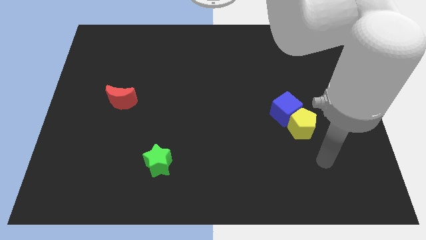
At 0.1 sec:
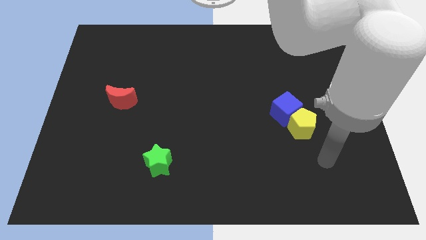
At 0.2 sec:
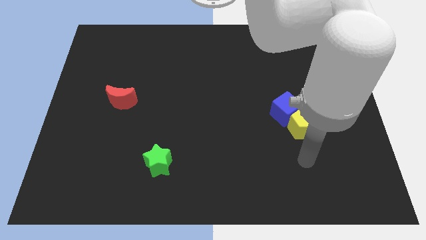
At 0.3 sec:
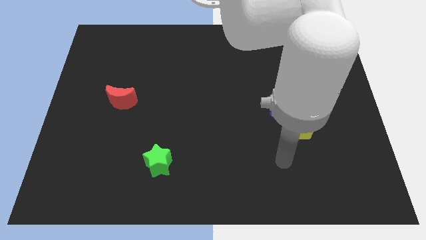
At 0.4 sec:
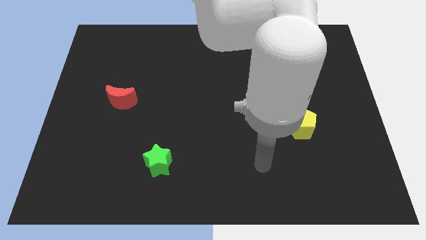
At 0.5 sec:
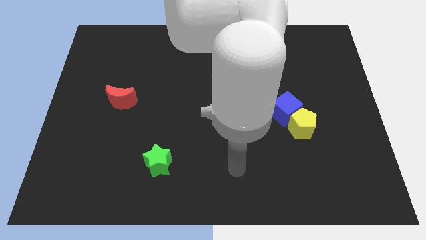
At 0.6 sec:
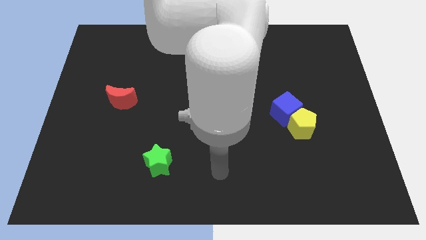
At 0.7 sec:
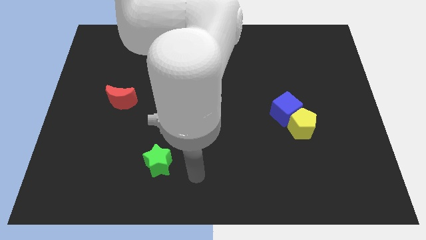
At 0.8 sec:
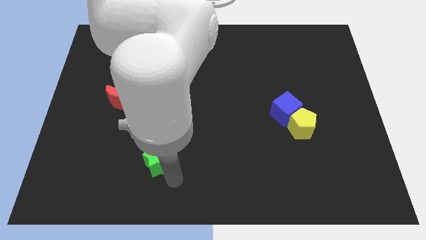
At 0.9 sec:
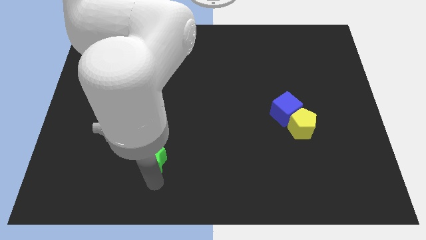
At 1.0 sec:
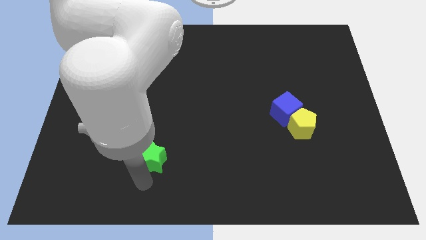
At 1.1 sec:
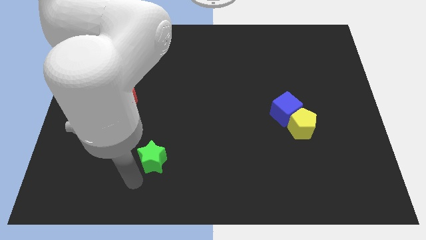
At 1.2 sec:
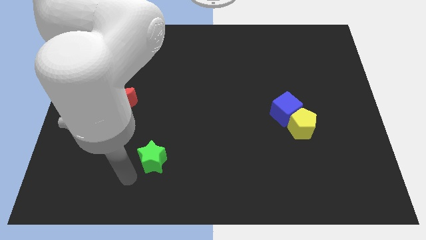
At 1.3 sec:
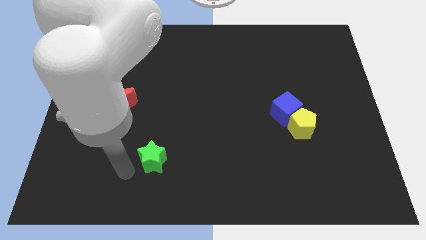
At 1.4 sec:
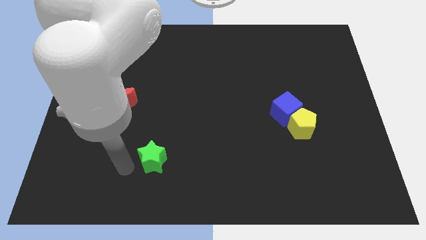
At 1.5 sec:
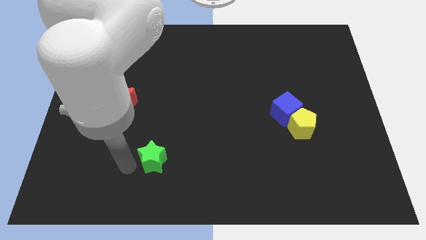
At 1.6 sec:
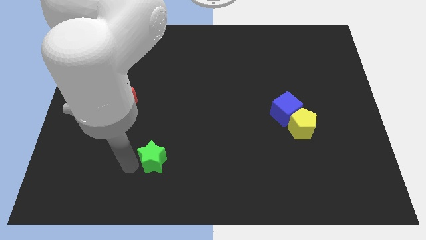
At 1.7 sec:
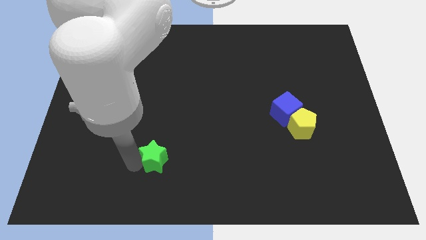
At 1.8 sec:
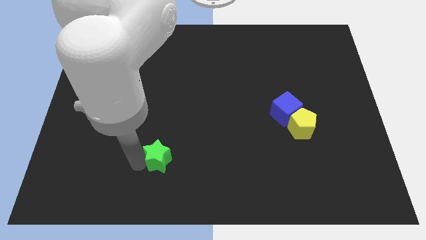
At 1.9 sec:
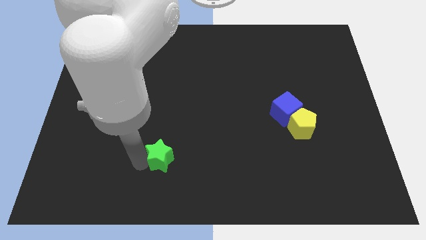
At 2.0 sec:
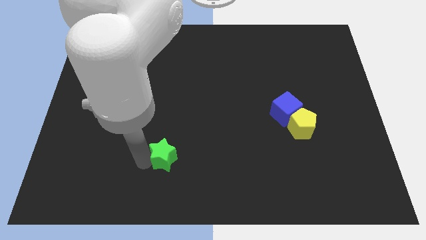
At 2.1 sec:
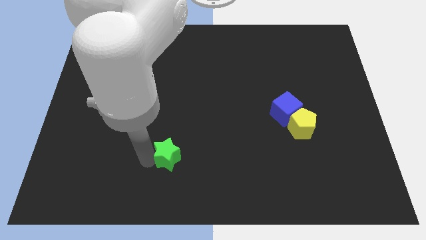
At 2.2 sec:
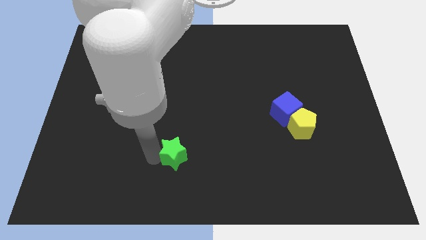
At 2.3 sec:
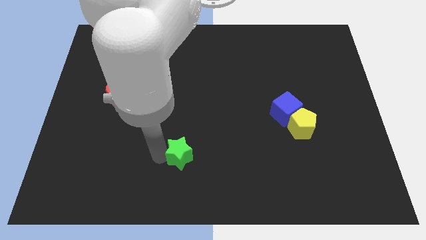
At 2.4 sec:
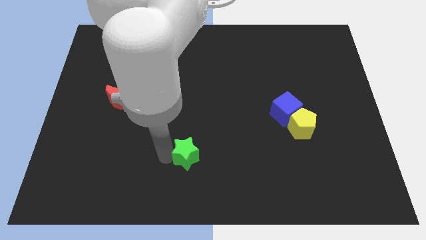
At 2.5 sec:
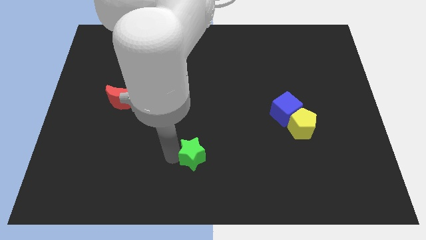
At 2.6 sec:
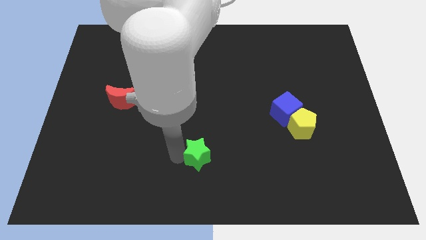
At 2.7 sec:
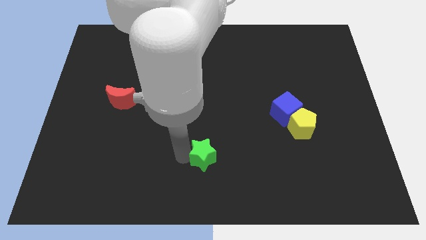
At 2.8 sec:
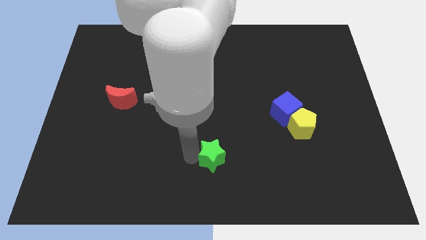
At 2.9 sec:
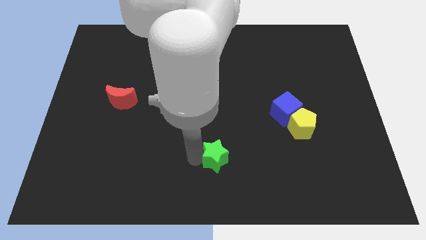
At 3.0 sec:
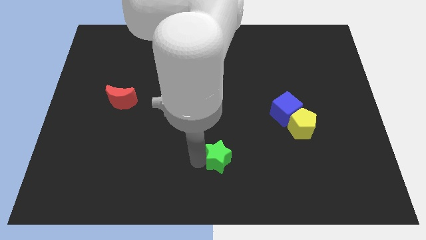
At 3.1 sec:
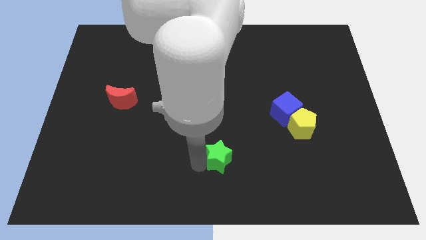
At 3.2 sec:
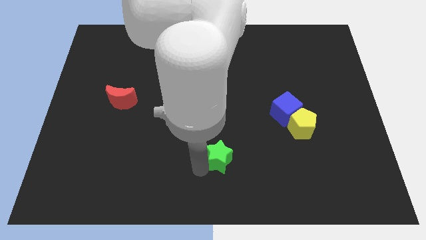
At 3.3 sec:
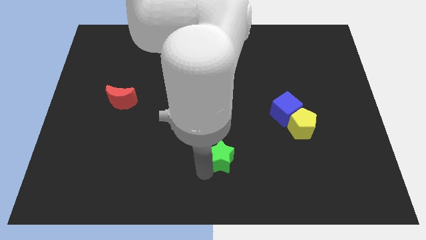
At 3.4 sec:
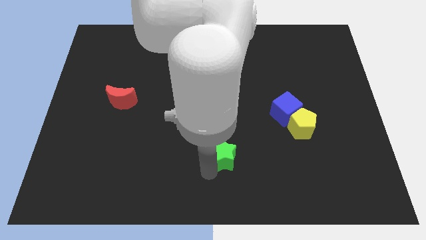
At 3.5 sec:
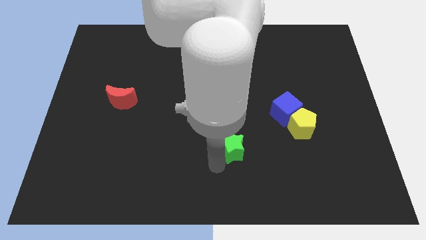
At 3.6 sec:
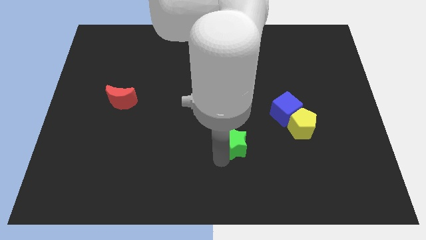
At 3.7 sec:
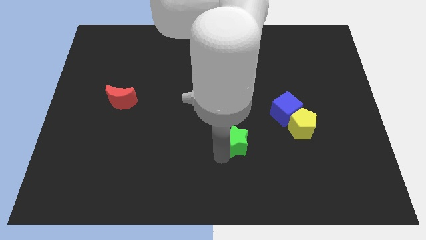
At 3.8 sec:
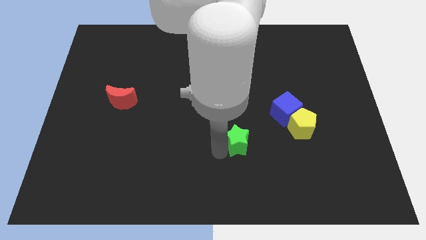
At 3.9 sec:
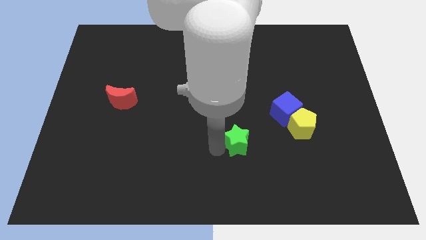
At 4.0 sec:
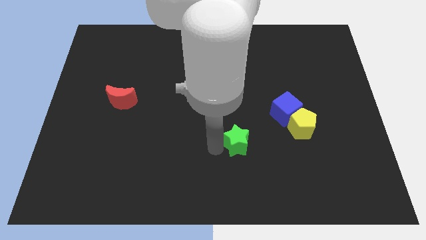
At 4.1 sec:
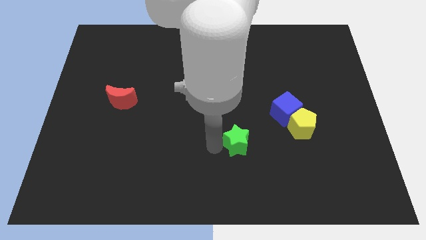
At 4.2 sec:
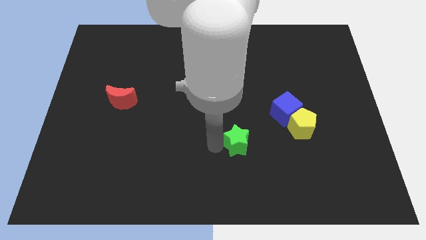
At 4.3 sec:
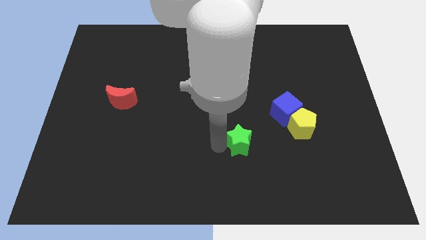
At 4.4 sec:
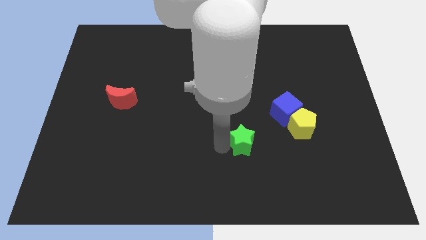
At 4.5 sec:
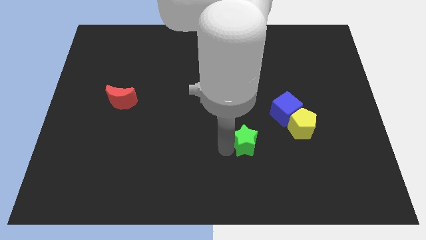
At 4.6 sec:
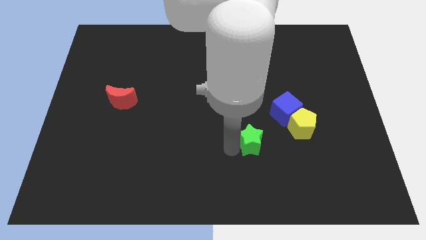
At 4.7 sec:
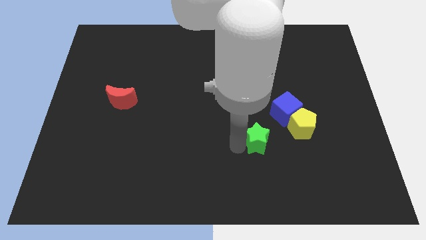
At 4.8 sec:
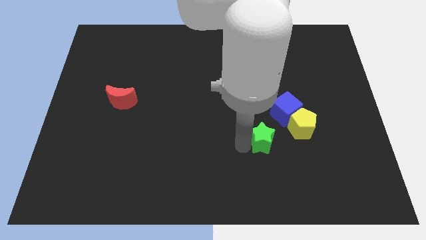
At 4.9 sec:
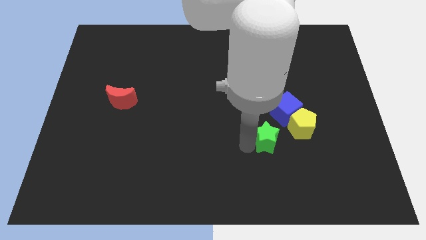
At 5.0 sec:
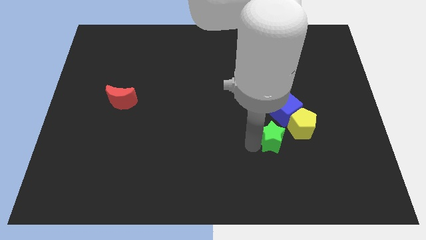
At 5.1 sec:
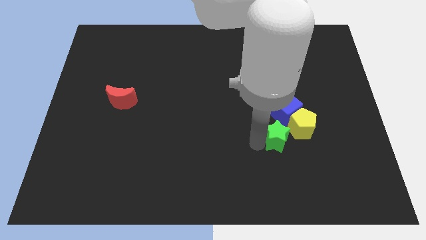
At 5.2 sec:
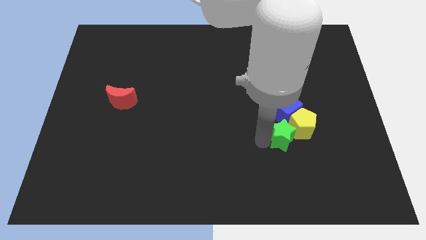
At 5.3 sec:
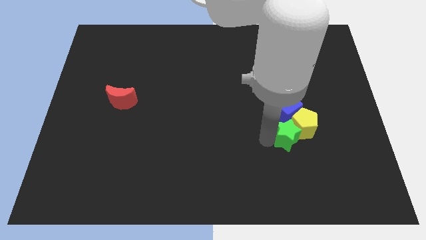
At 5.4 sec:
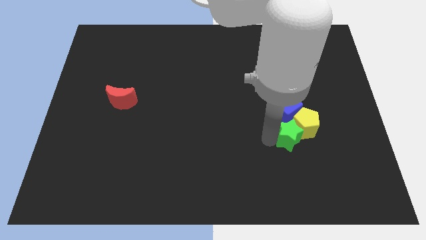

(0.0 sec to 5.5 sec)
move the green block close to the pentagon

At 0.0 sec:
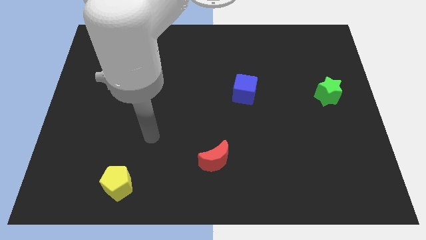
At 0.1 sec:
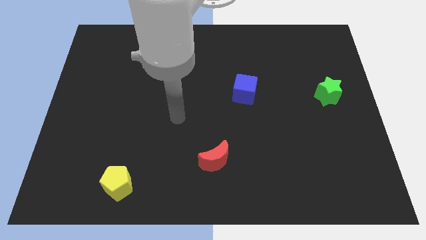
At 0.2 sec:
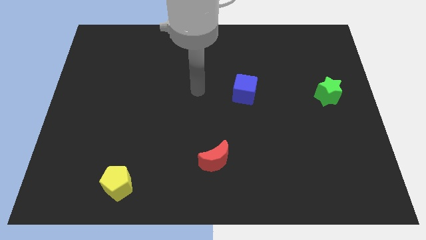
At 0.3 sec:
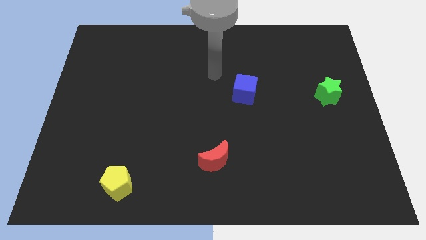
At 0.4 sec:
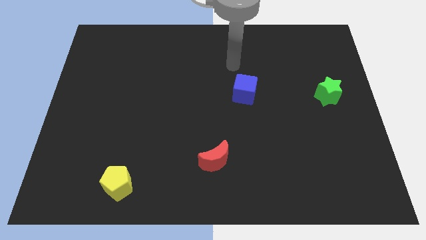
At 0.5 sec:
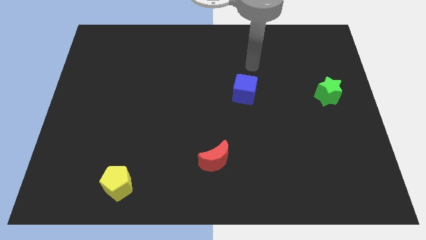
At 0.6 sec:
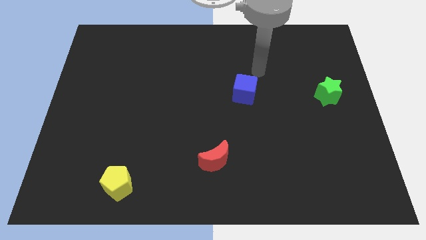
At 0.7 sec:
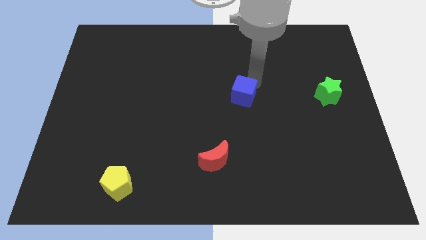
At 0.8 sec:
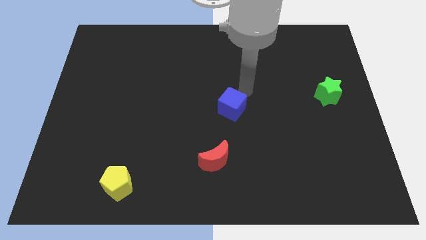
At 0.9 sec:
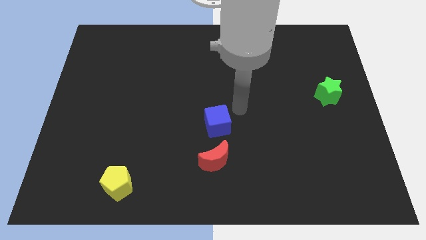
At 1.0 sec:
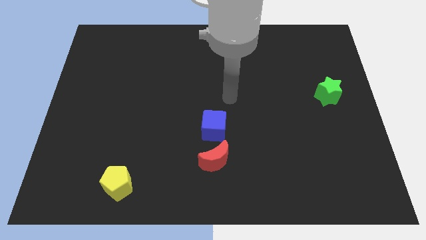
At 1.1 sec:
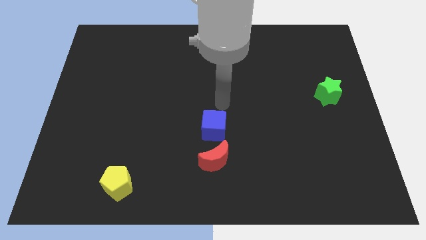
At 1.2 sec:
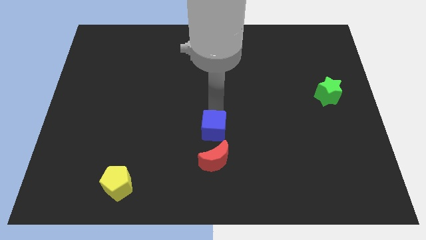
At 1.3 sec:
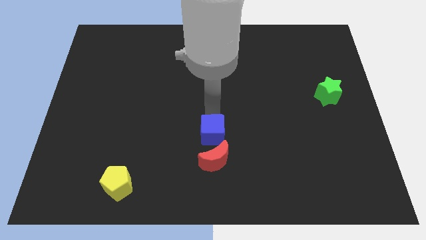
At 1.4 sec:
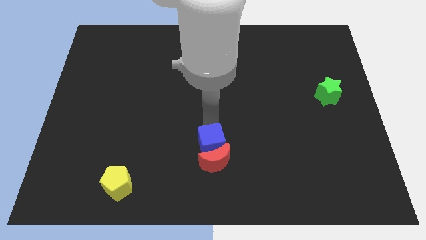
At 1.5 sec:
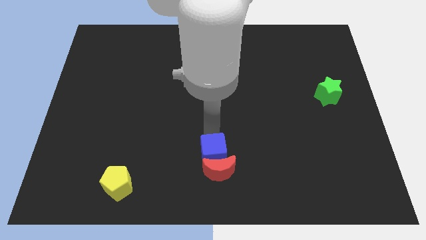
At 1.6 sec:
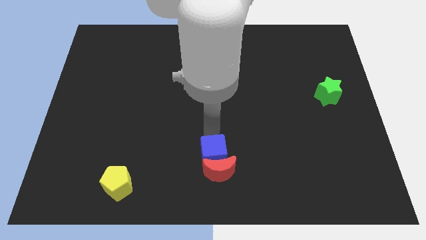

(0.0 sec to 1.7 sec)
move the blue cube towards the moon

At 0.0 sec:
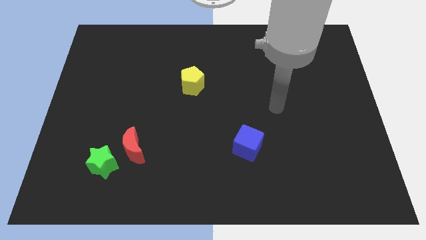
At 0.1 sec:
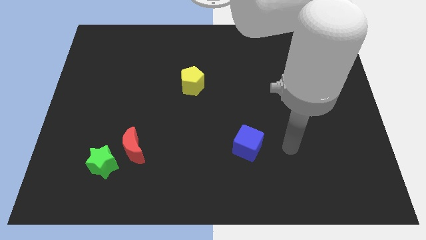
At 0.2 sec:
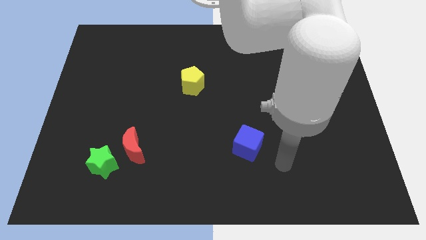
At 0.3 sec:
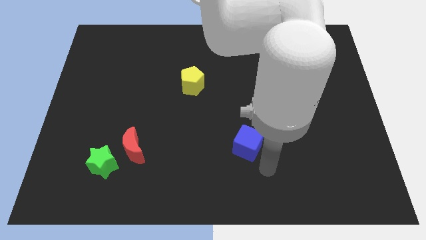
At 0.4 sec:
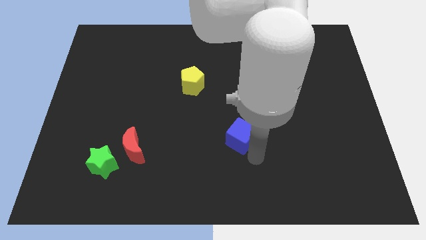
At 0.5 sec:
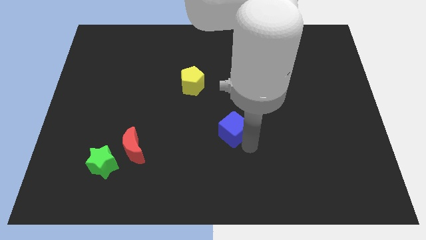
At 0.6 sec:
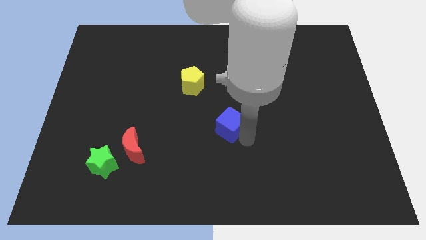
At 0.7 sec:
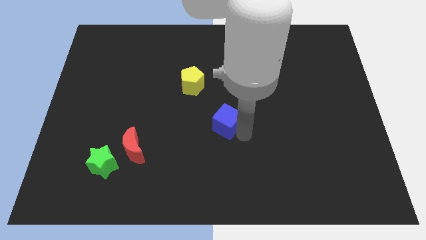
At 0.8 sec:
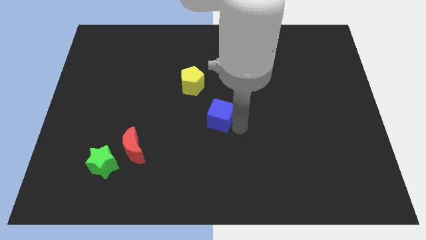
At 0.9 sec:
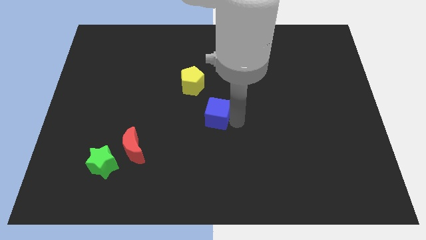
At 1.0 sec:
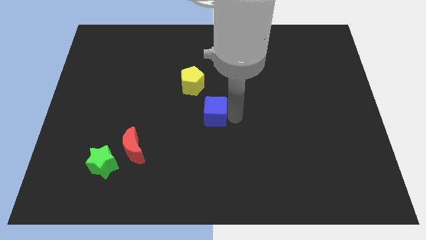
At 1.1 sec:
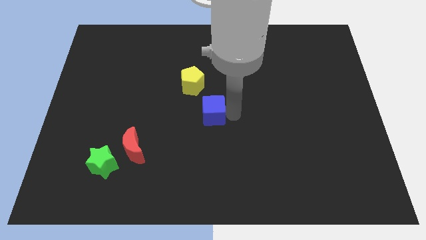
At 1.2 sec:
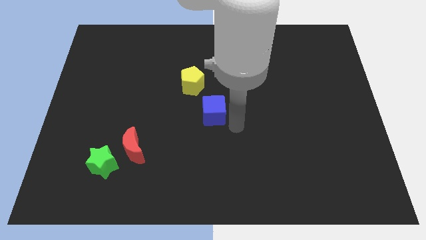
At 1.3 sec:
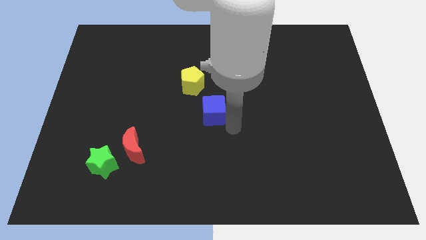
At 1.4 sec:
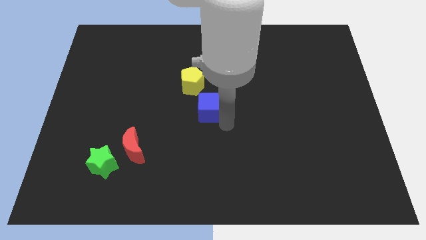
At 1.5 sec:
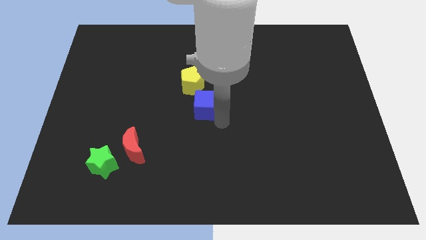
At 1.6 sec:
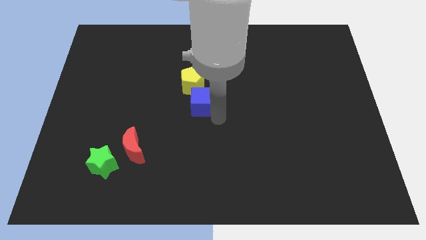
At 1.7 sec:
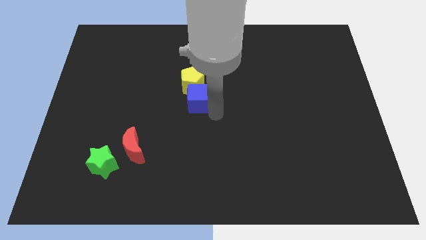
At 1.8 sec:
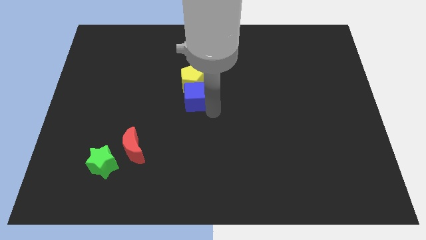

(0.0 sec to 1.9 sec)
push the blue cube next to the pentagon
